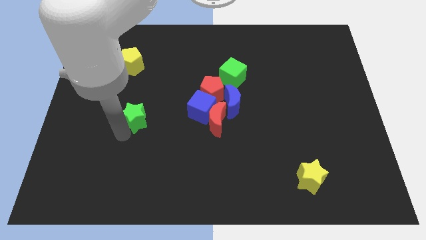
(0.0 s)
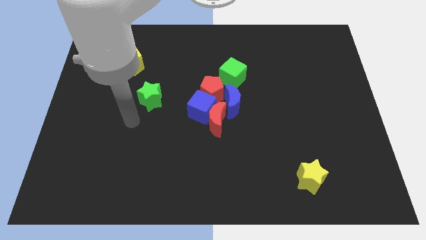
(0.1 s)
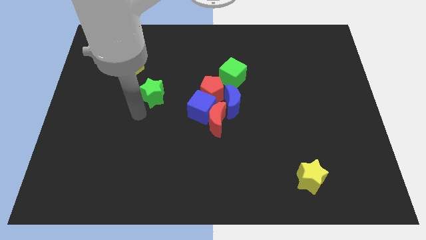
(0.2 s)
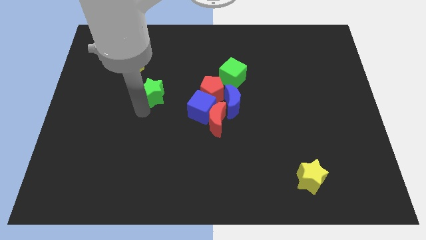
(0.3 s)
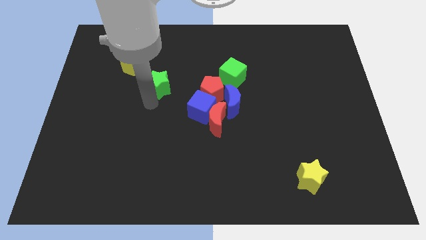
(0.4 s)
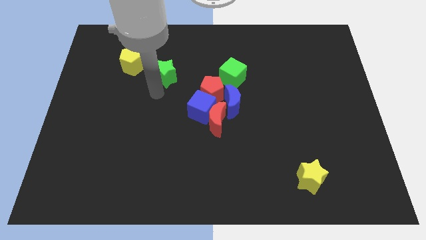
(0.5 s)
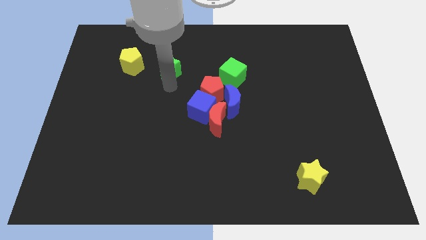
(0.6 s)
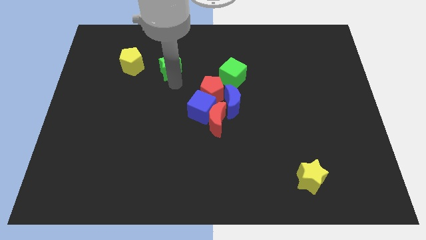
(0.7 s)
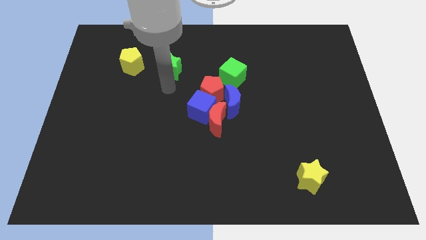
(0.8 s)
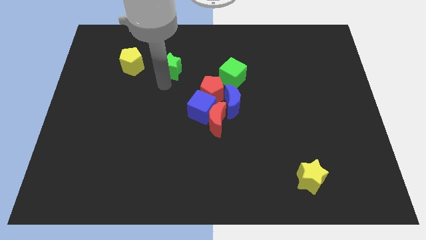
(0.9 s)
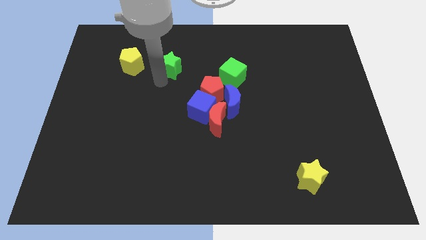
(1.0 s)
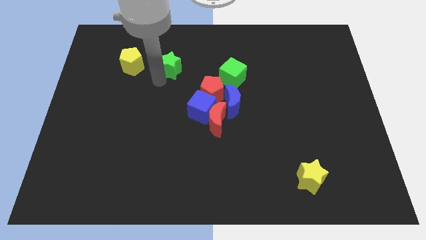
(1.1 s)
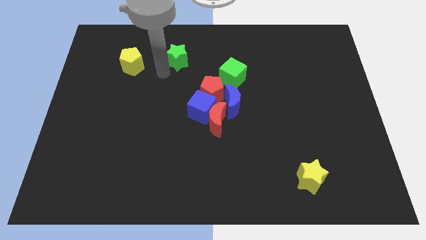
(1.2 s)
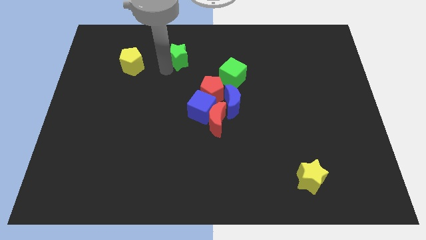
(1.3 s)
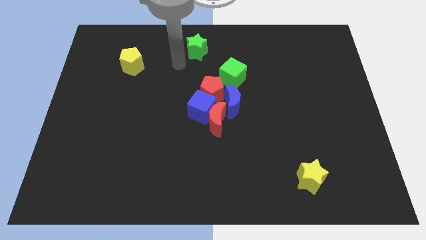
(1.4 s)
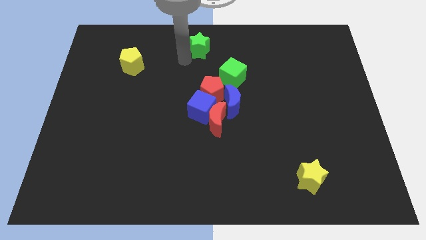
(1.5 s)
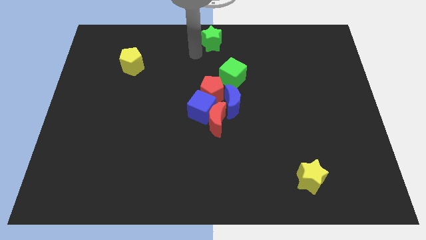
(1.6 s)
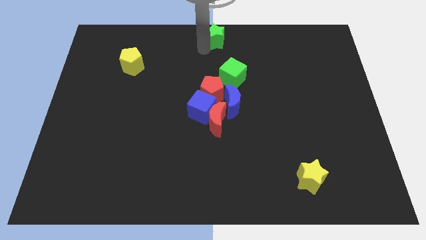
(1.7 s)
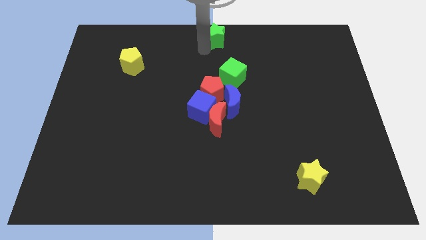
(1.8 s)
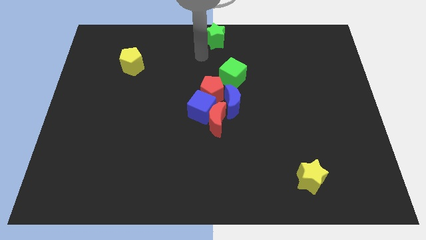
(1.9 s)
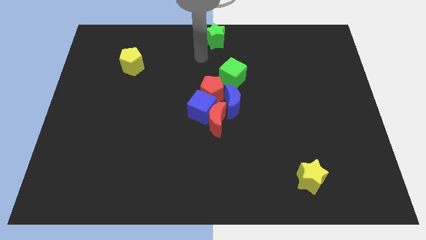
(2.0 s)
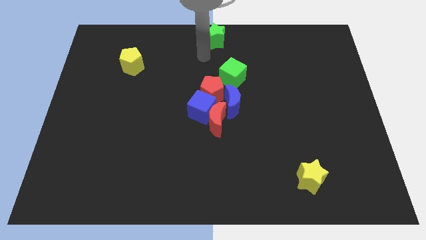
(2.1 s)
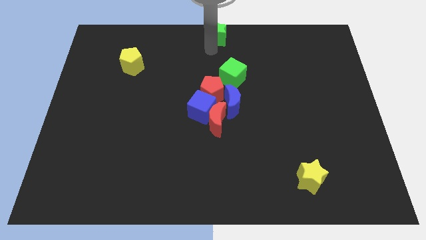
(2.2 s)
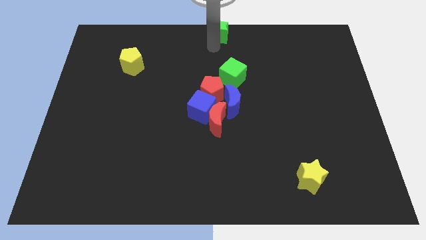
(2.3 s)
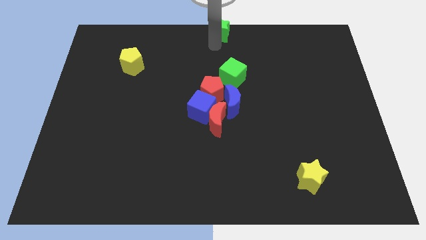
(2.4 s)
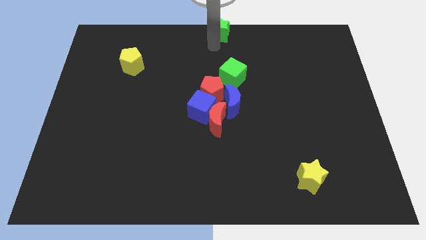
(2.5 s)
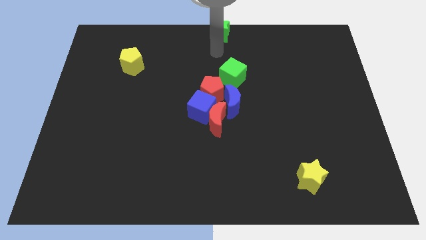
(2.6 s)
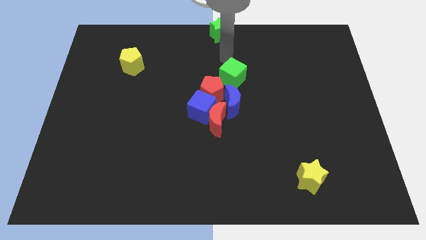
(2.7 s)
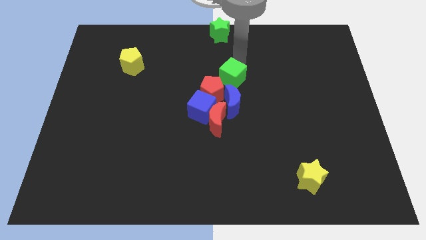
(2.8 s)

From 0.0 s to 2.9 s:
place the green star on the top middle of the board

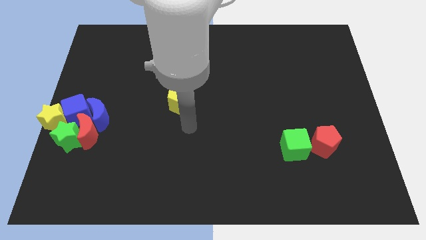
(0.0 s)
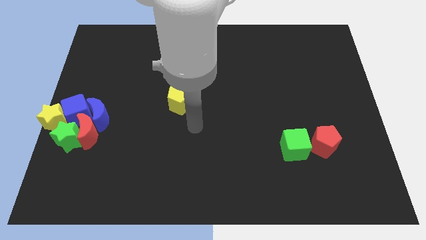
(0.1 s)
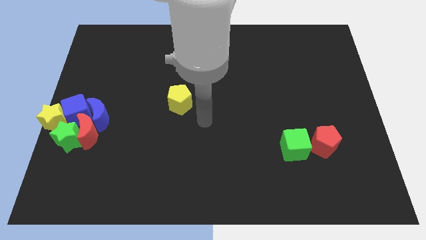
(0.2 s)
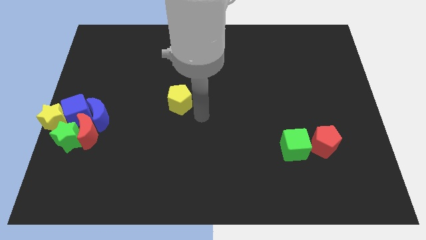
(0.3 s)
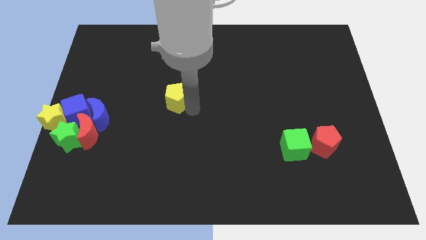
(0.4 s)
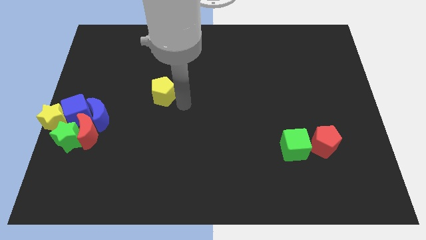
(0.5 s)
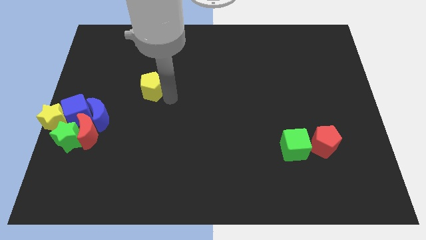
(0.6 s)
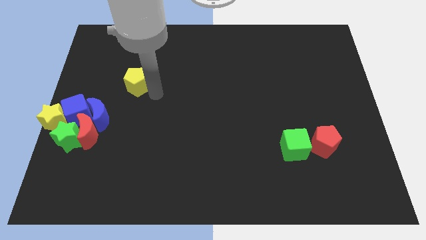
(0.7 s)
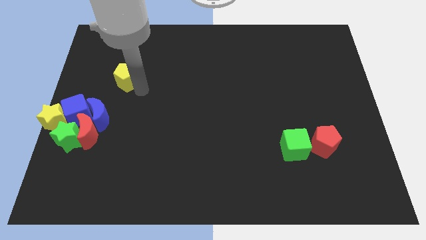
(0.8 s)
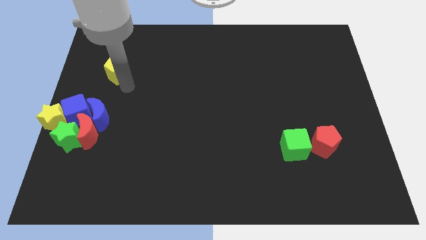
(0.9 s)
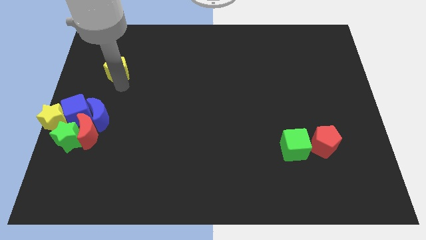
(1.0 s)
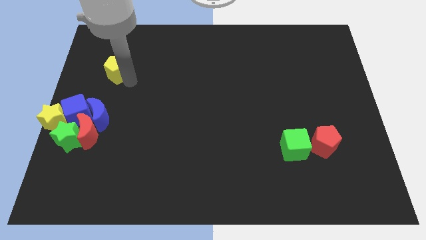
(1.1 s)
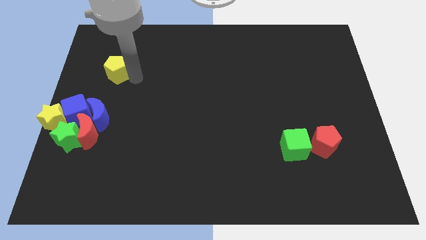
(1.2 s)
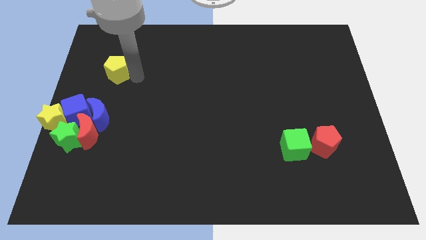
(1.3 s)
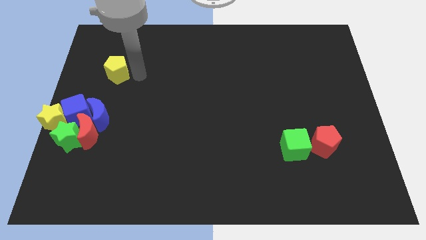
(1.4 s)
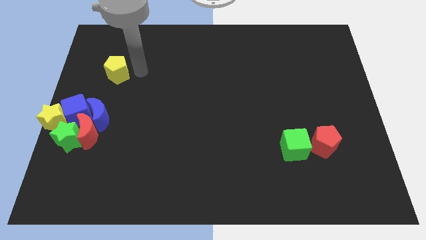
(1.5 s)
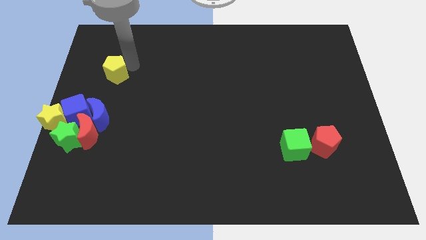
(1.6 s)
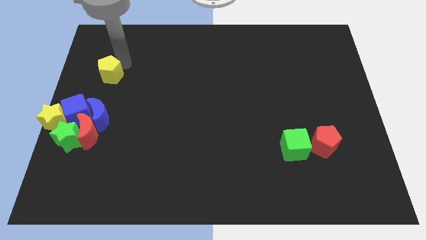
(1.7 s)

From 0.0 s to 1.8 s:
place the yellow pentagon above the blue craesnt

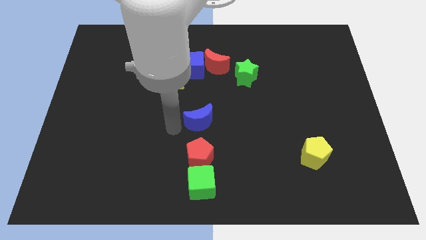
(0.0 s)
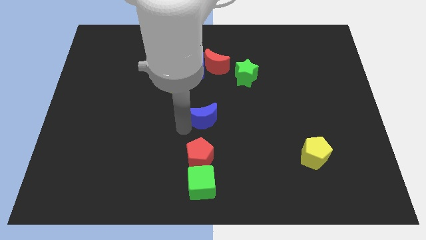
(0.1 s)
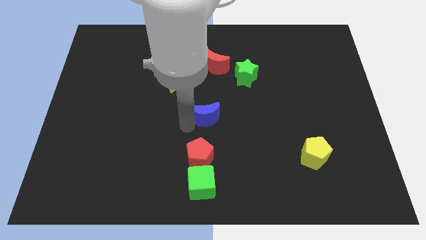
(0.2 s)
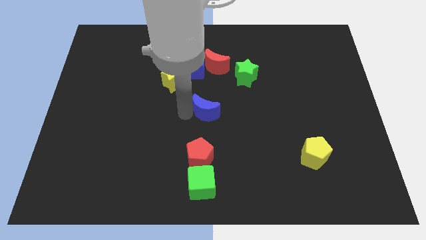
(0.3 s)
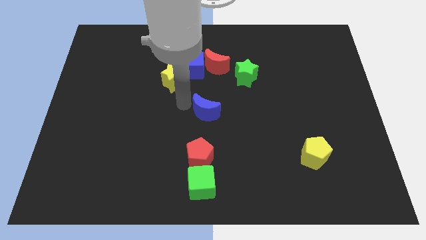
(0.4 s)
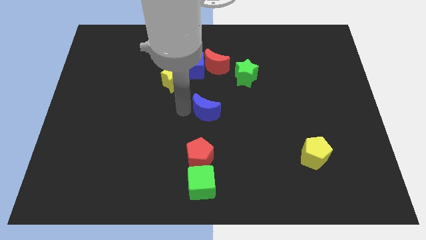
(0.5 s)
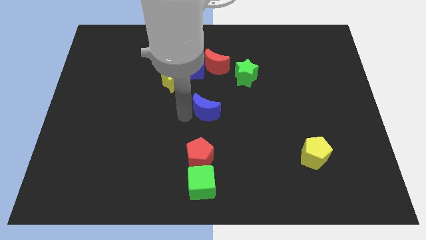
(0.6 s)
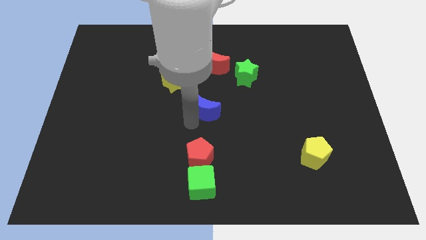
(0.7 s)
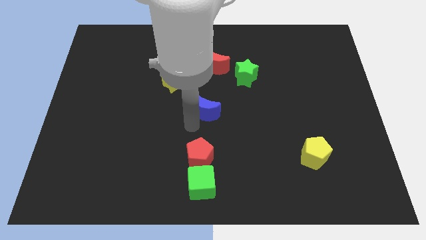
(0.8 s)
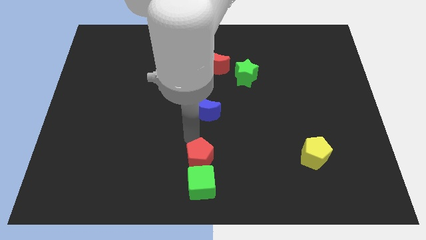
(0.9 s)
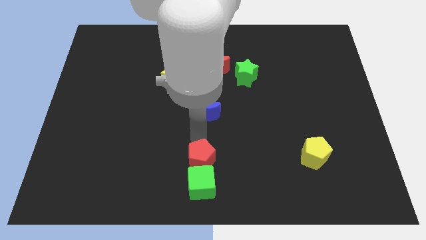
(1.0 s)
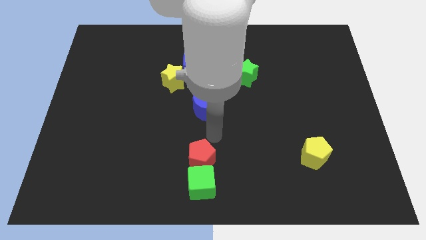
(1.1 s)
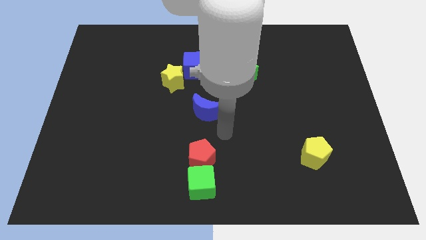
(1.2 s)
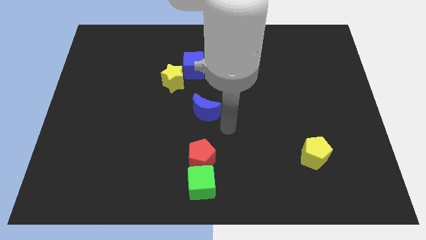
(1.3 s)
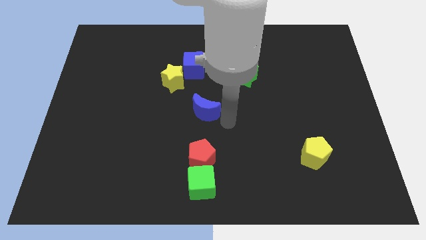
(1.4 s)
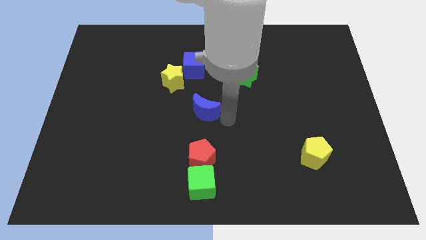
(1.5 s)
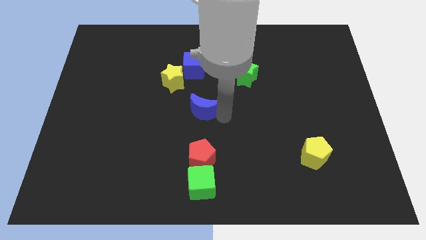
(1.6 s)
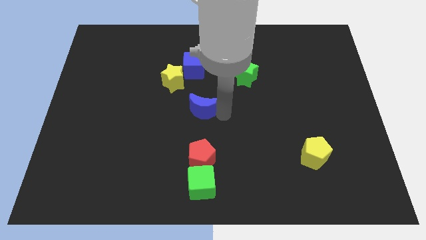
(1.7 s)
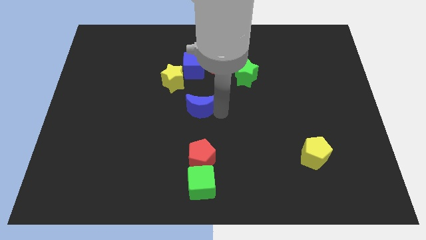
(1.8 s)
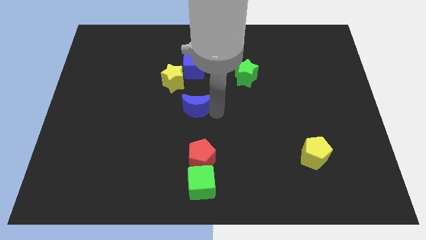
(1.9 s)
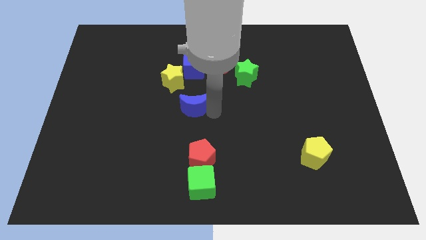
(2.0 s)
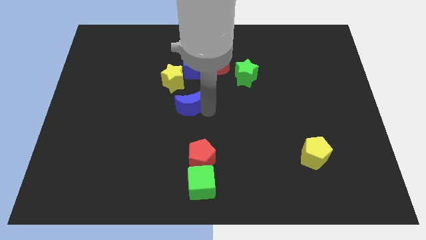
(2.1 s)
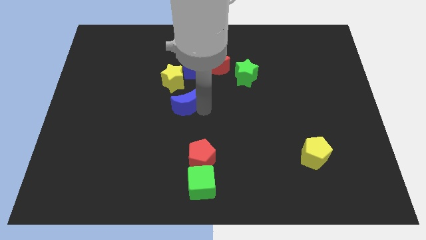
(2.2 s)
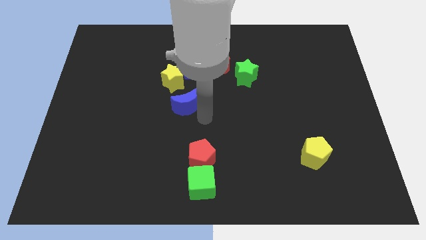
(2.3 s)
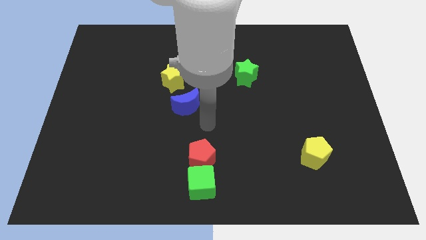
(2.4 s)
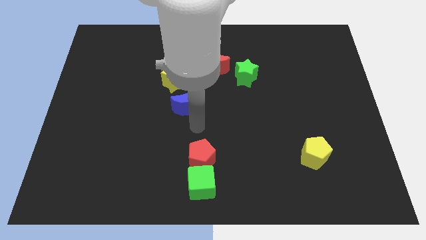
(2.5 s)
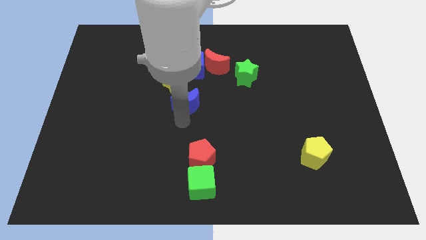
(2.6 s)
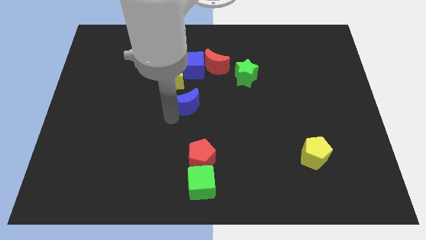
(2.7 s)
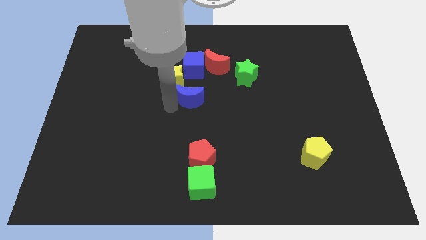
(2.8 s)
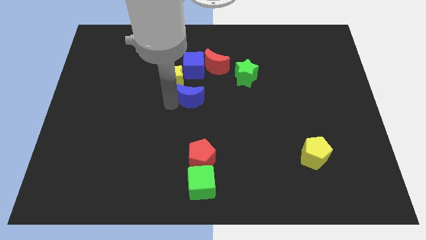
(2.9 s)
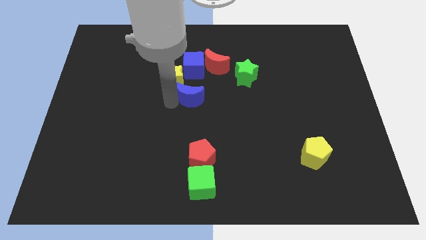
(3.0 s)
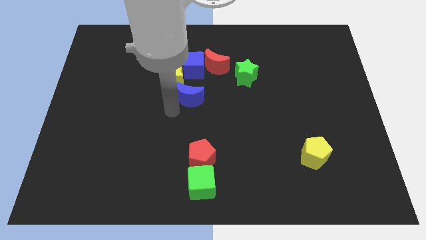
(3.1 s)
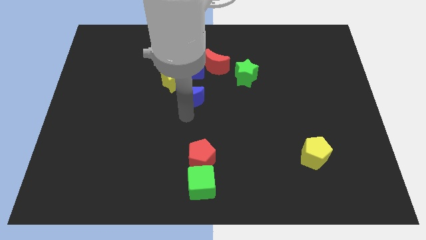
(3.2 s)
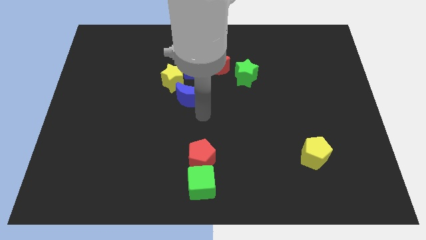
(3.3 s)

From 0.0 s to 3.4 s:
push the blue crescent towards the yellow star

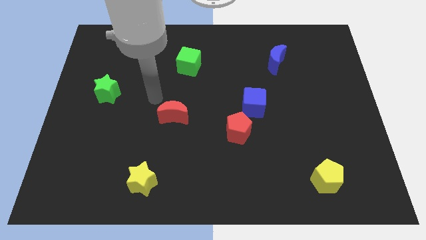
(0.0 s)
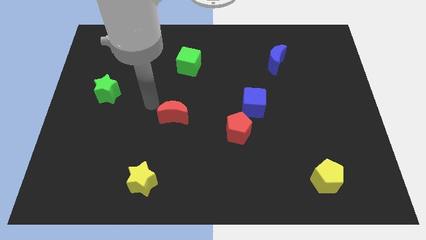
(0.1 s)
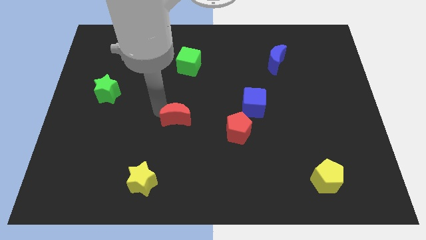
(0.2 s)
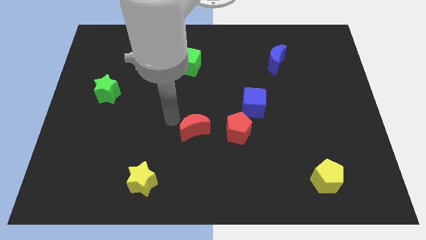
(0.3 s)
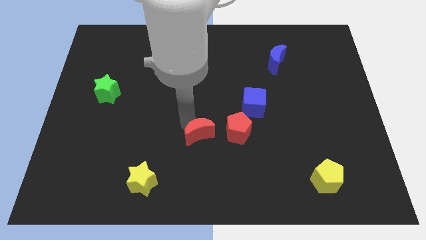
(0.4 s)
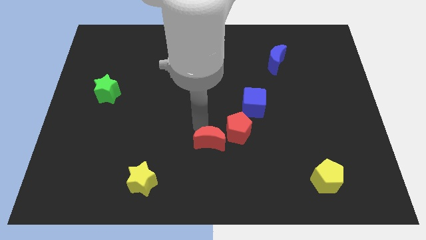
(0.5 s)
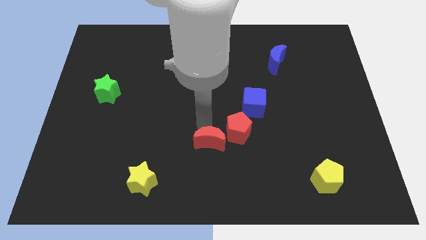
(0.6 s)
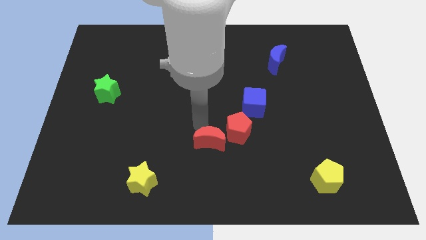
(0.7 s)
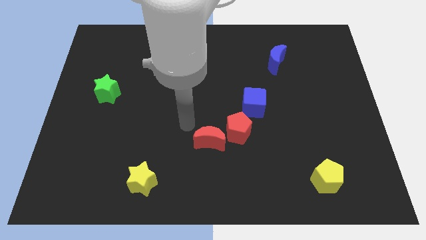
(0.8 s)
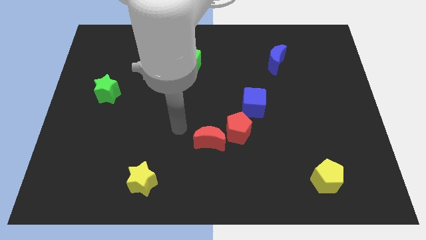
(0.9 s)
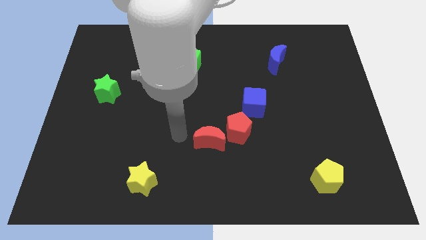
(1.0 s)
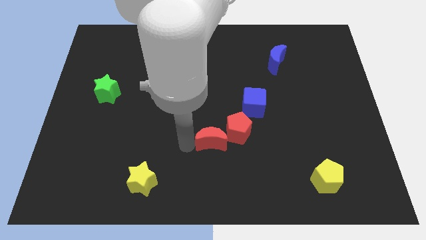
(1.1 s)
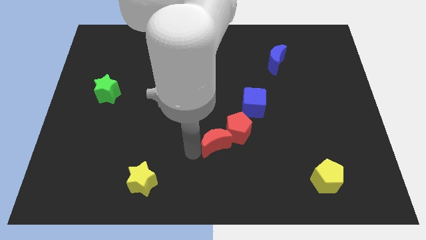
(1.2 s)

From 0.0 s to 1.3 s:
place the red crescent to bottom of red pentagon
